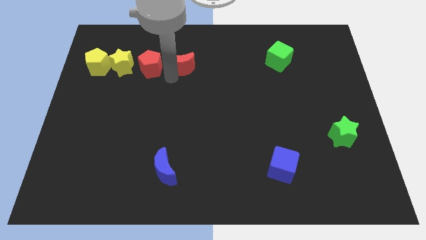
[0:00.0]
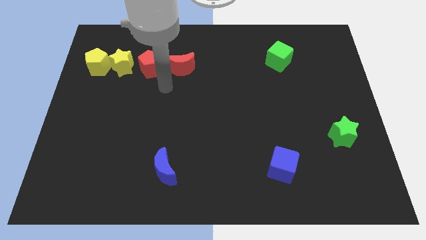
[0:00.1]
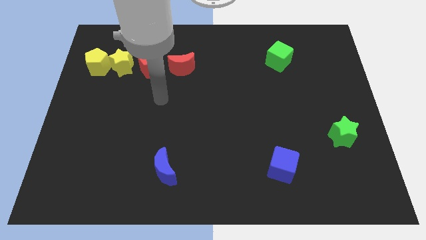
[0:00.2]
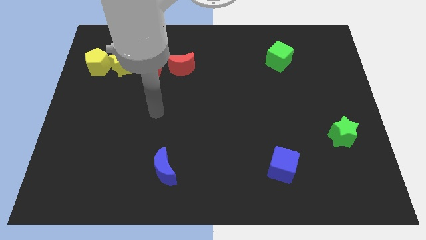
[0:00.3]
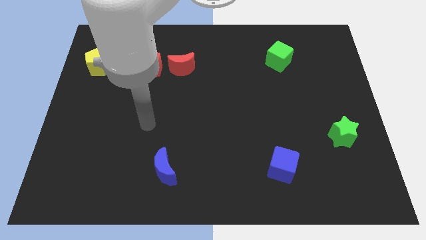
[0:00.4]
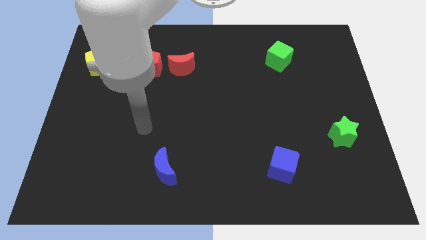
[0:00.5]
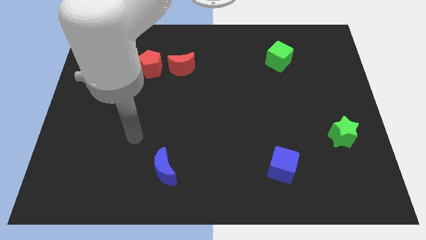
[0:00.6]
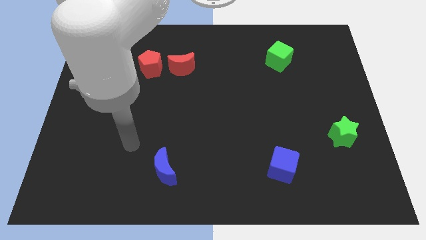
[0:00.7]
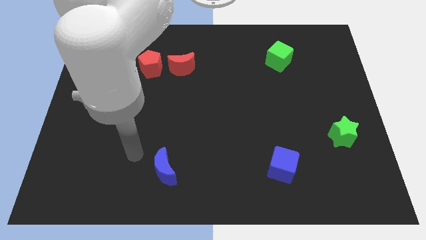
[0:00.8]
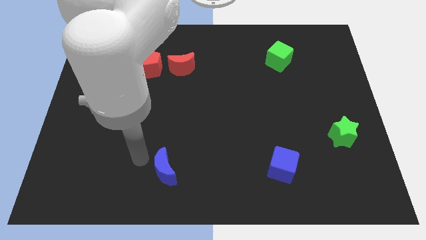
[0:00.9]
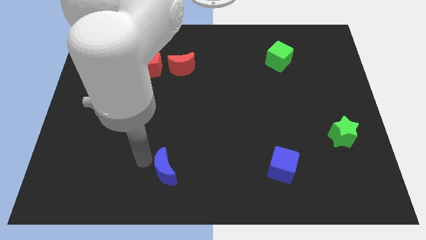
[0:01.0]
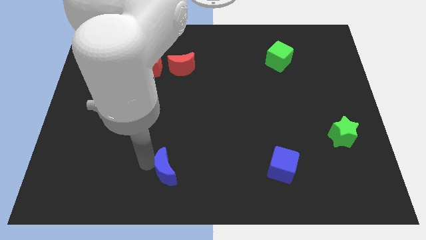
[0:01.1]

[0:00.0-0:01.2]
move your arm away from the red moon

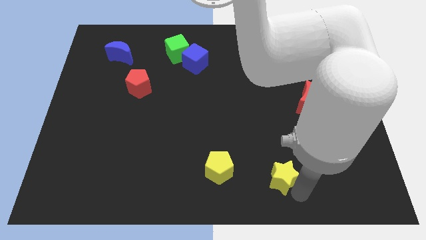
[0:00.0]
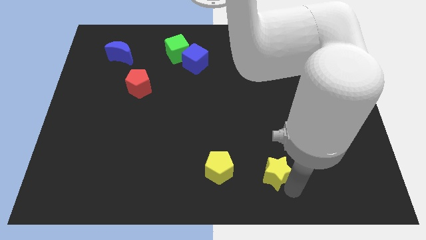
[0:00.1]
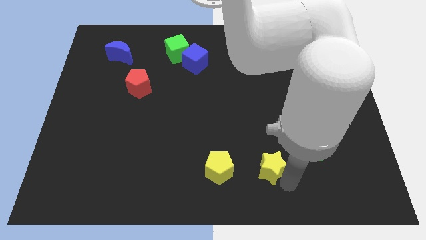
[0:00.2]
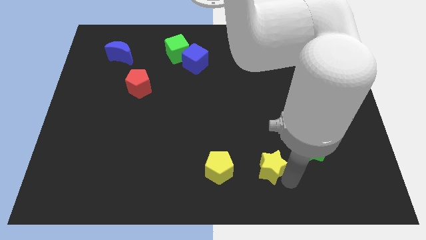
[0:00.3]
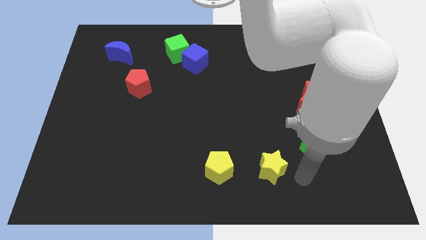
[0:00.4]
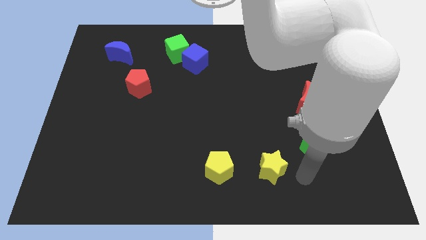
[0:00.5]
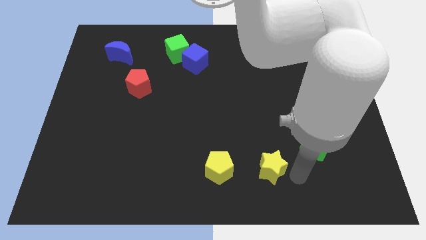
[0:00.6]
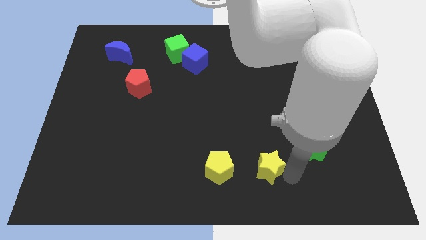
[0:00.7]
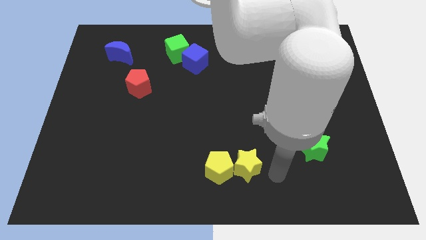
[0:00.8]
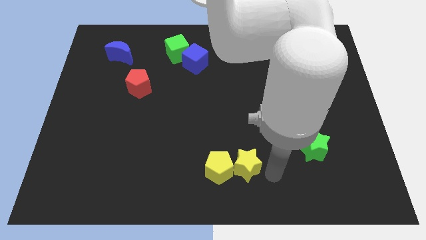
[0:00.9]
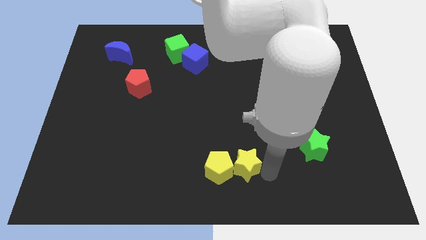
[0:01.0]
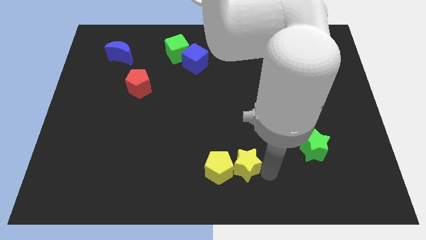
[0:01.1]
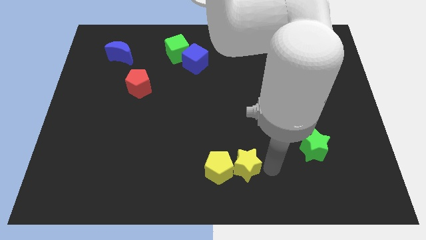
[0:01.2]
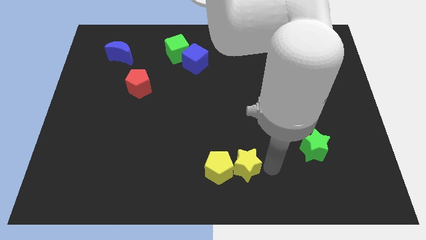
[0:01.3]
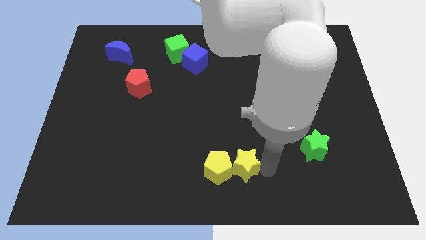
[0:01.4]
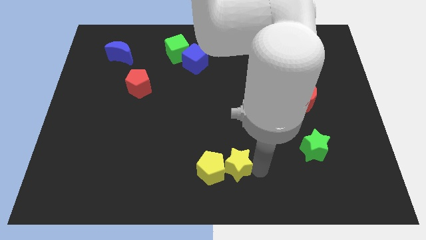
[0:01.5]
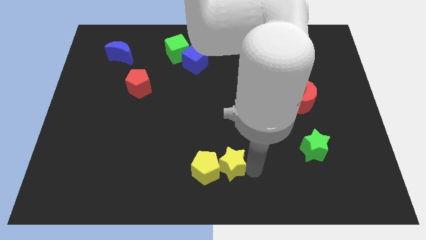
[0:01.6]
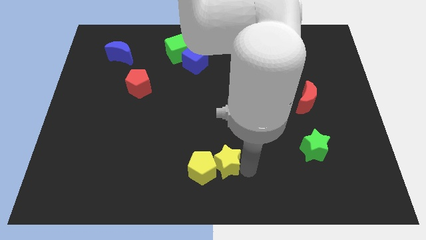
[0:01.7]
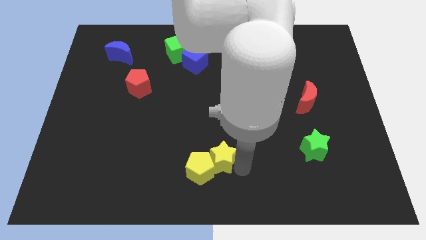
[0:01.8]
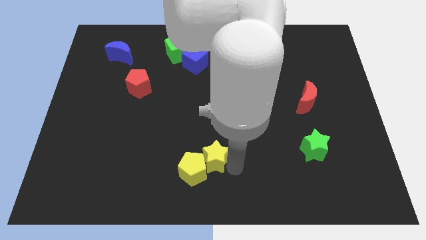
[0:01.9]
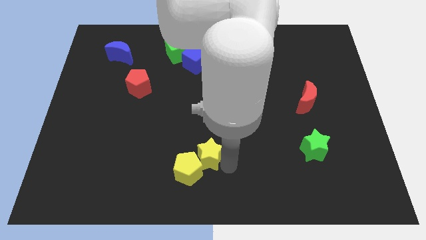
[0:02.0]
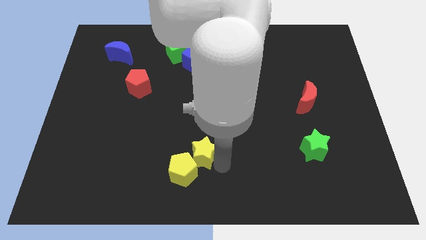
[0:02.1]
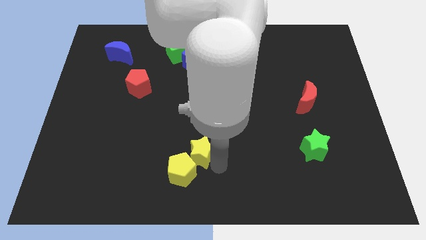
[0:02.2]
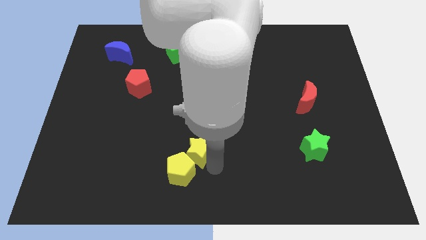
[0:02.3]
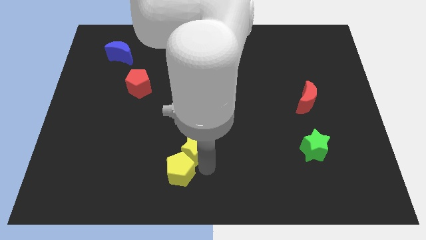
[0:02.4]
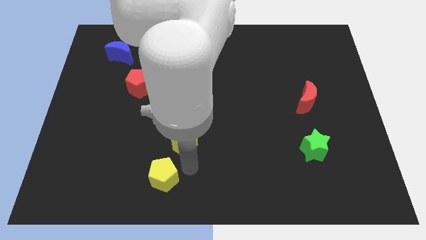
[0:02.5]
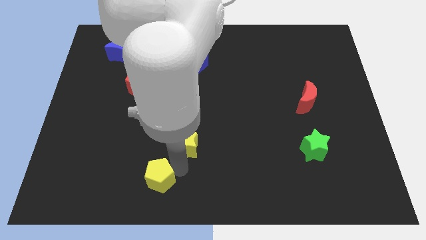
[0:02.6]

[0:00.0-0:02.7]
separate yellow pentagon from yellow star

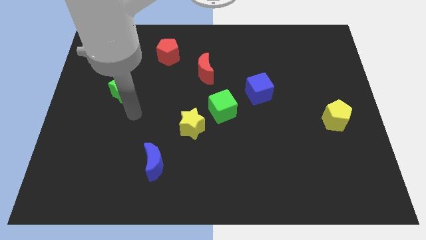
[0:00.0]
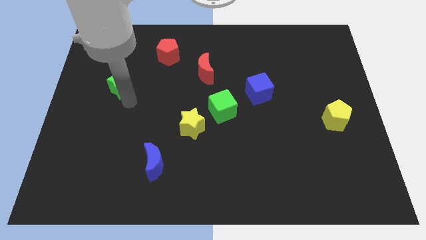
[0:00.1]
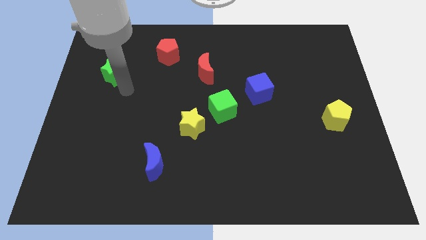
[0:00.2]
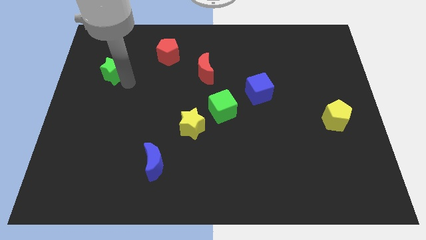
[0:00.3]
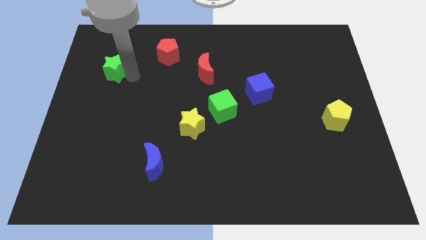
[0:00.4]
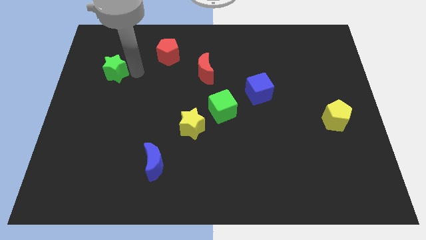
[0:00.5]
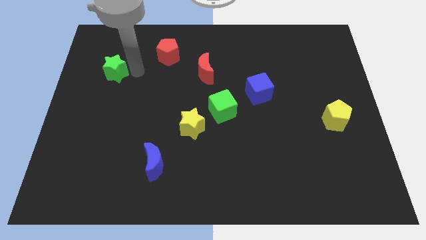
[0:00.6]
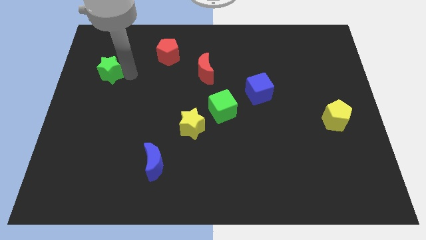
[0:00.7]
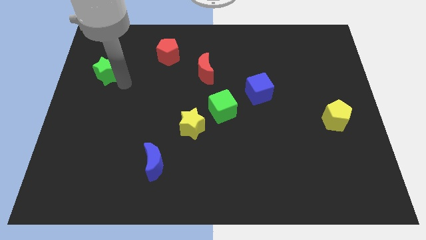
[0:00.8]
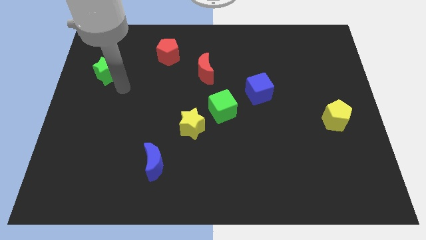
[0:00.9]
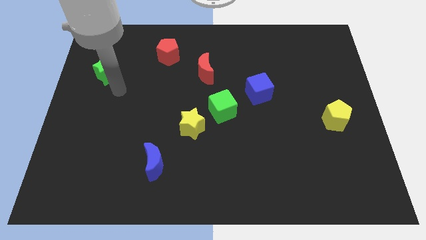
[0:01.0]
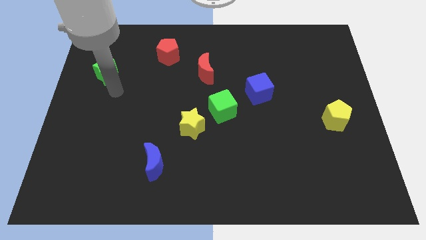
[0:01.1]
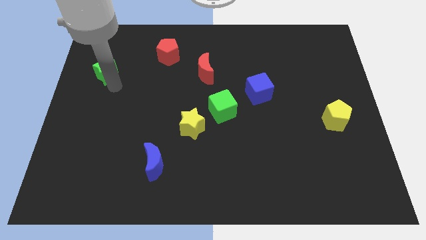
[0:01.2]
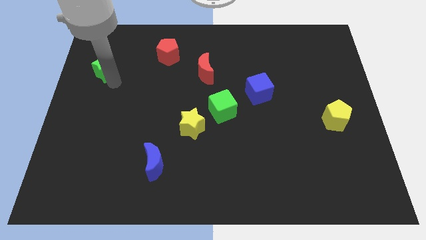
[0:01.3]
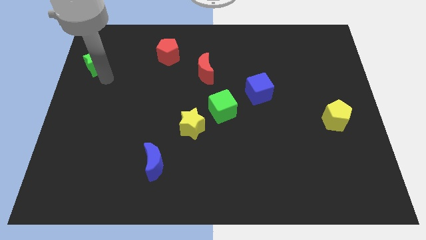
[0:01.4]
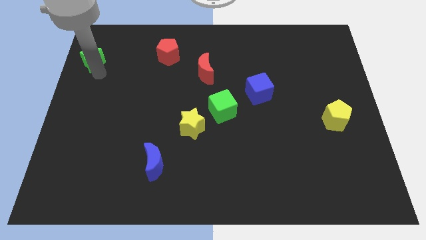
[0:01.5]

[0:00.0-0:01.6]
move green star to the top left side

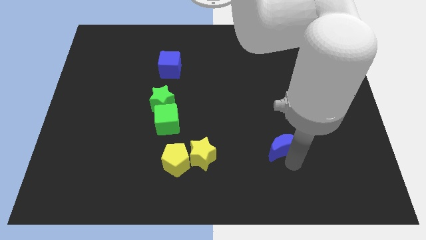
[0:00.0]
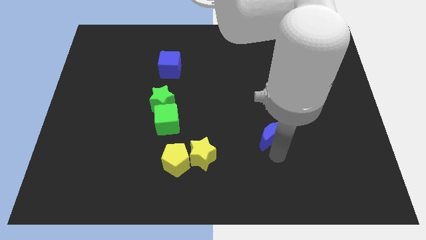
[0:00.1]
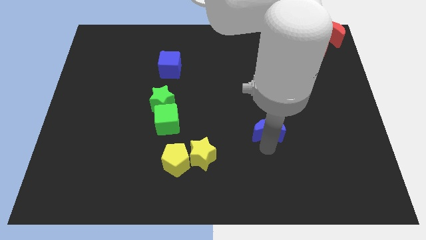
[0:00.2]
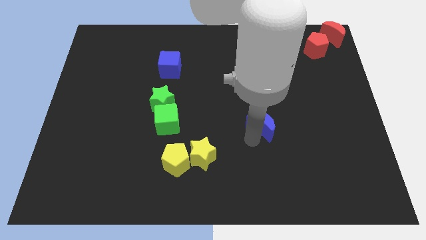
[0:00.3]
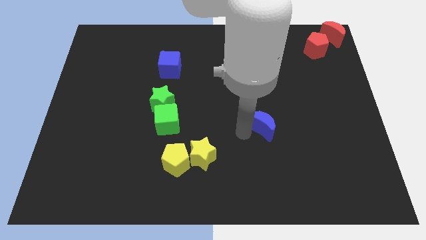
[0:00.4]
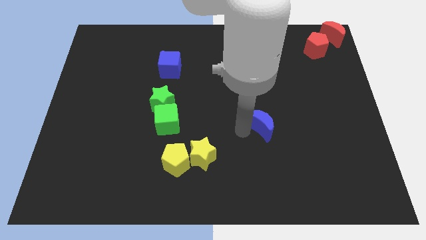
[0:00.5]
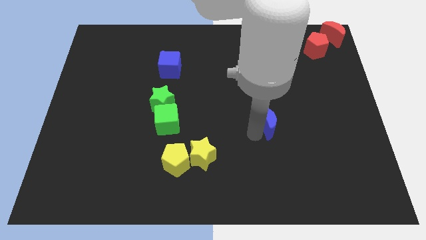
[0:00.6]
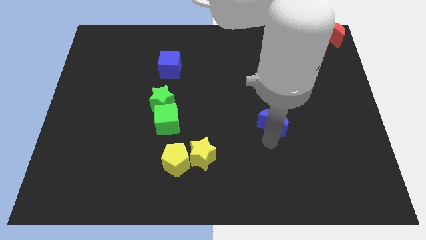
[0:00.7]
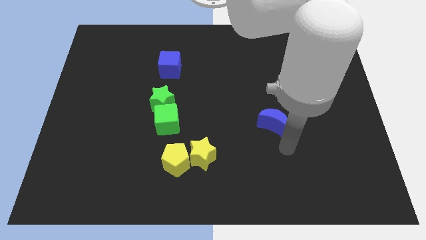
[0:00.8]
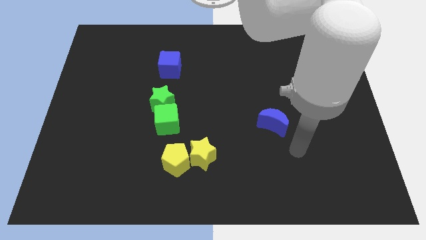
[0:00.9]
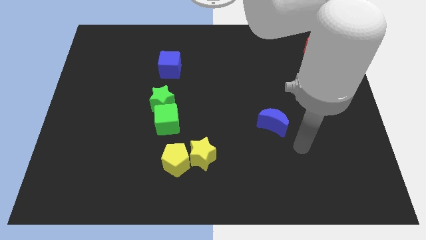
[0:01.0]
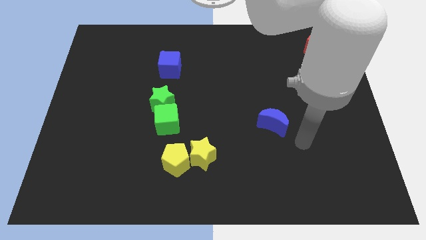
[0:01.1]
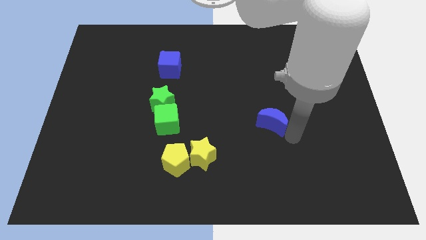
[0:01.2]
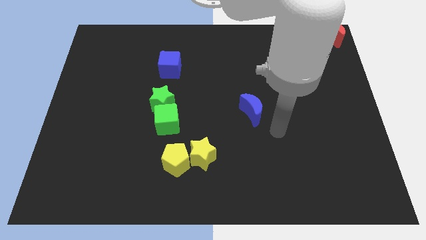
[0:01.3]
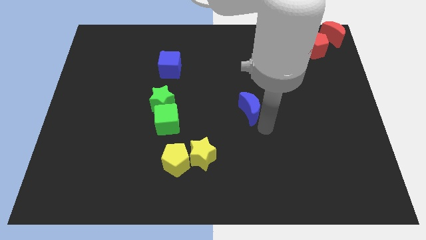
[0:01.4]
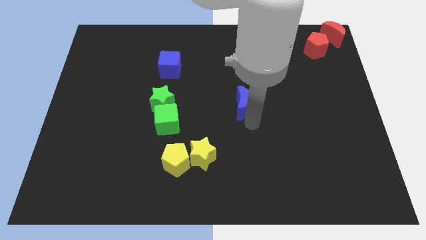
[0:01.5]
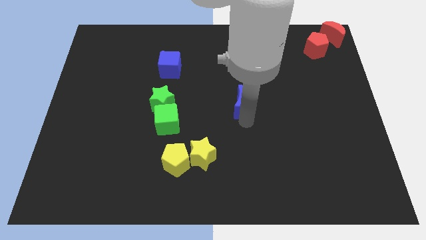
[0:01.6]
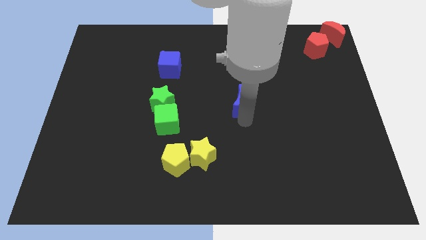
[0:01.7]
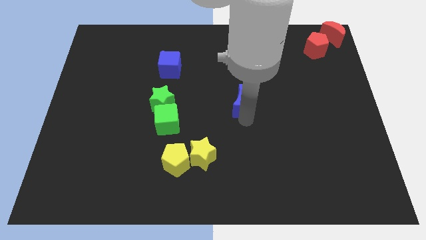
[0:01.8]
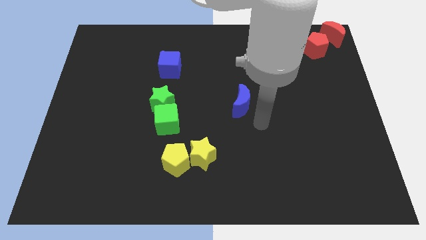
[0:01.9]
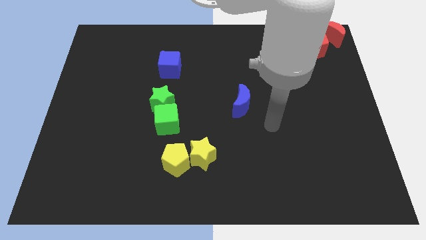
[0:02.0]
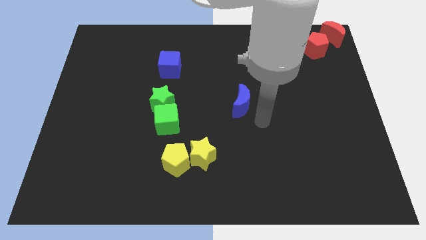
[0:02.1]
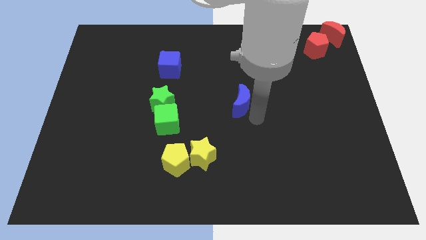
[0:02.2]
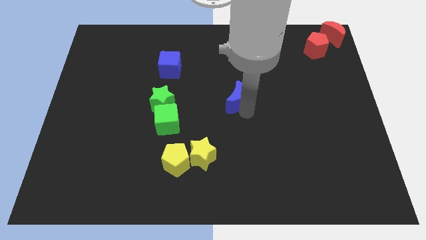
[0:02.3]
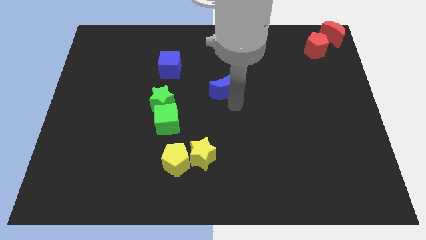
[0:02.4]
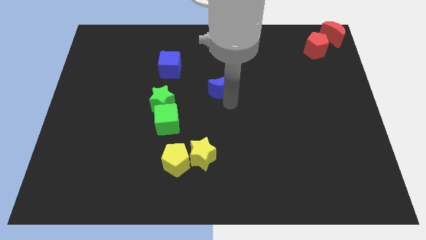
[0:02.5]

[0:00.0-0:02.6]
push the blue crescent towards the center of board

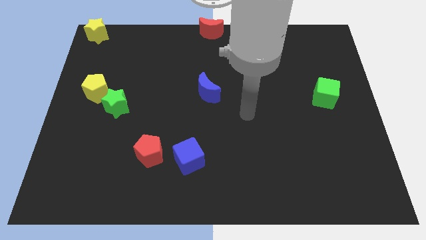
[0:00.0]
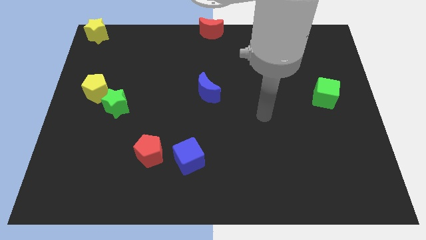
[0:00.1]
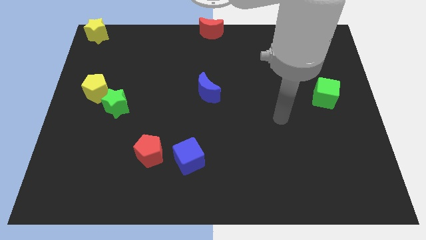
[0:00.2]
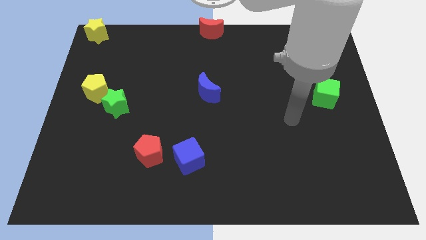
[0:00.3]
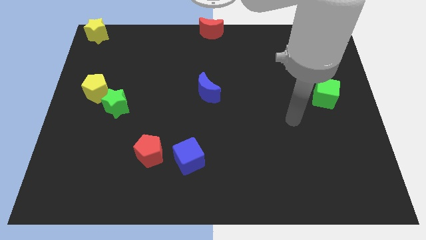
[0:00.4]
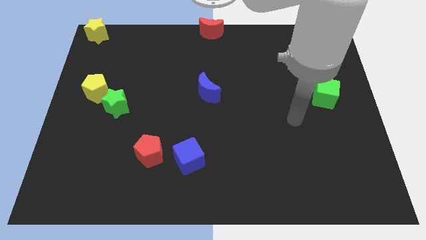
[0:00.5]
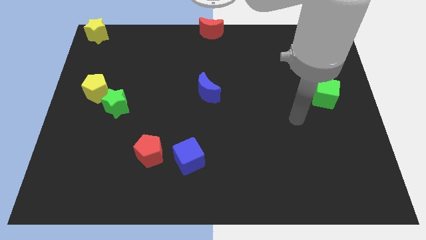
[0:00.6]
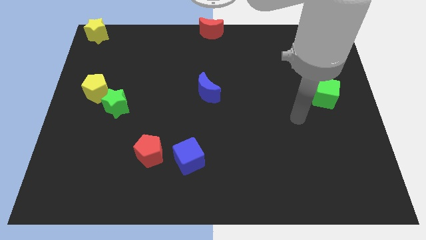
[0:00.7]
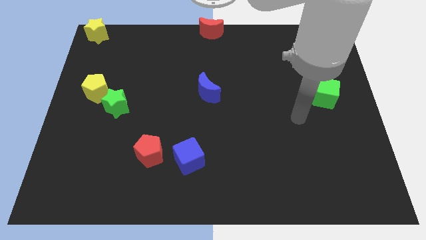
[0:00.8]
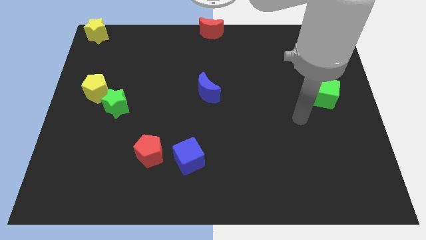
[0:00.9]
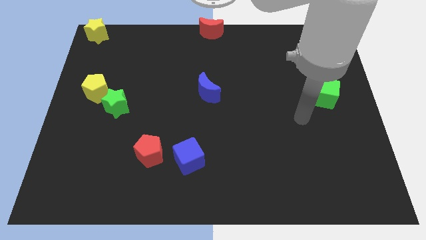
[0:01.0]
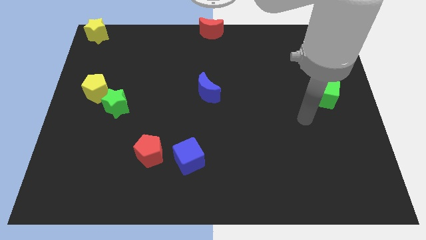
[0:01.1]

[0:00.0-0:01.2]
move the arm towards the green cube
